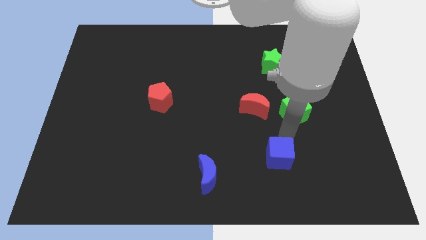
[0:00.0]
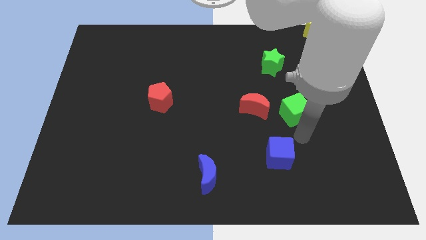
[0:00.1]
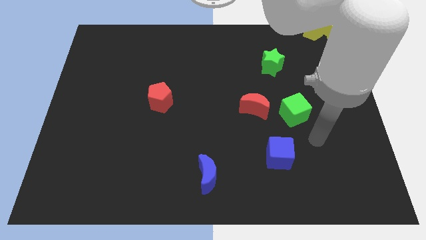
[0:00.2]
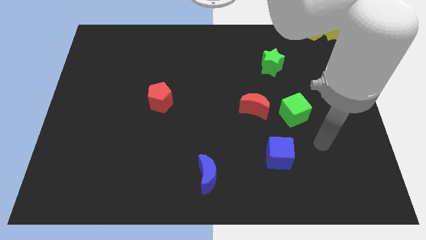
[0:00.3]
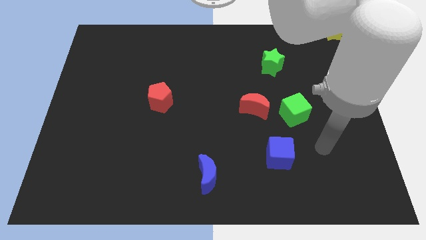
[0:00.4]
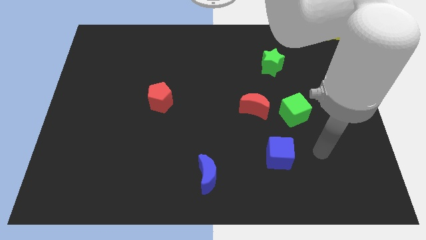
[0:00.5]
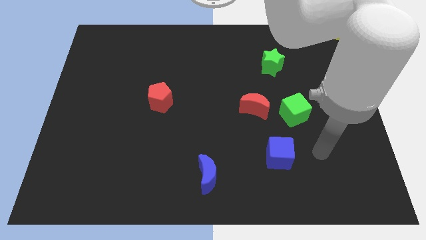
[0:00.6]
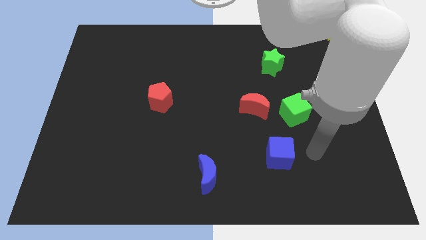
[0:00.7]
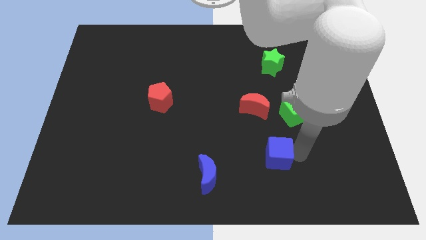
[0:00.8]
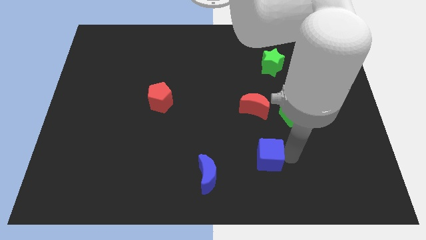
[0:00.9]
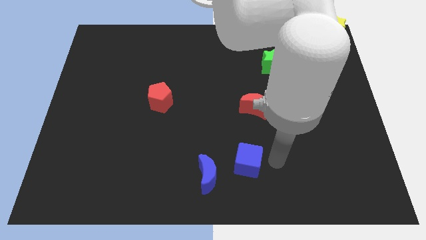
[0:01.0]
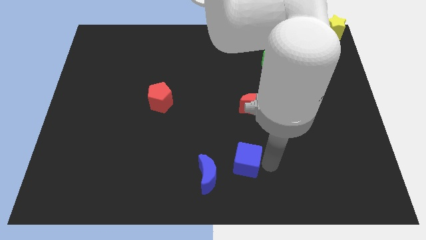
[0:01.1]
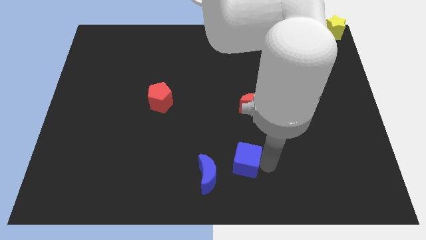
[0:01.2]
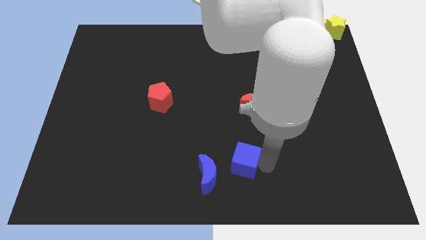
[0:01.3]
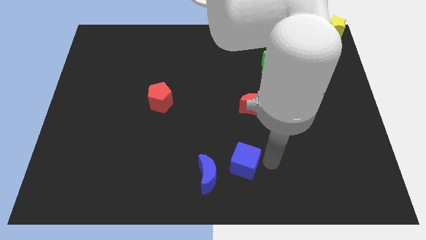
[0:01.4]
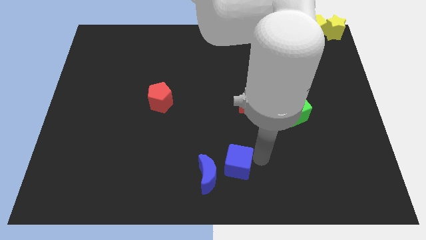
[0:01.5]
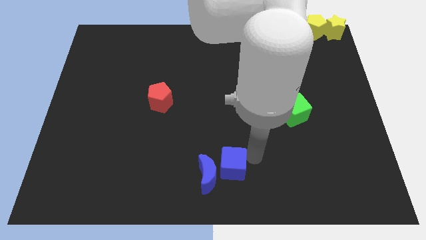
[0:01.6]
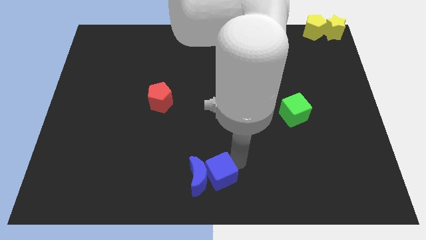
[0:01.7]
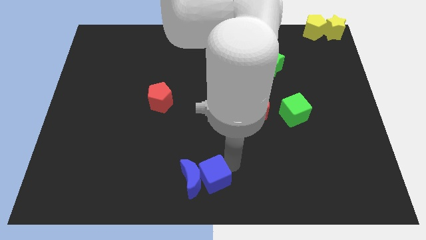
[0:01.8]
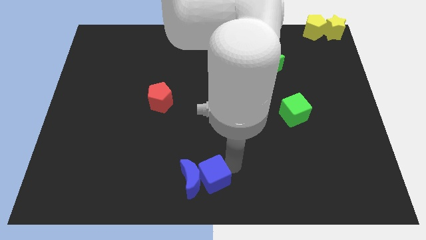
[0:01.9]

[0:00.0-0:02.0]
push the blue cube into the blue moon

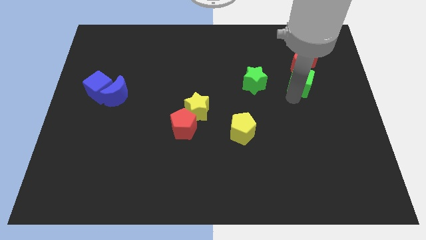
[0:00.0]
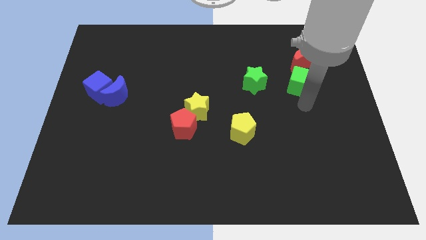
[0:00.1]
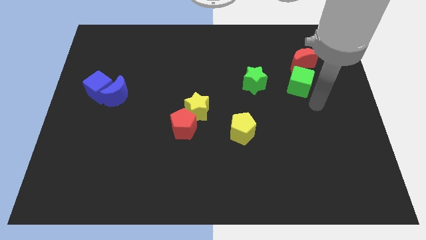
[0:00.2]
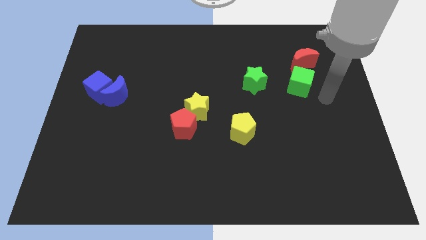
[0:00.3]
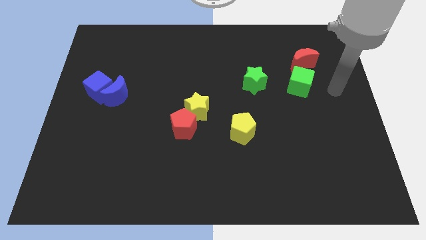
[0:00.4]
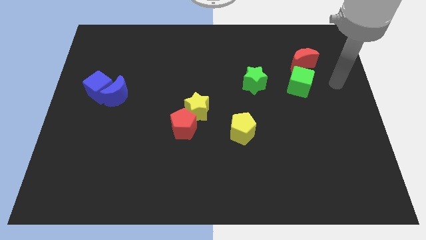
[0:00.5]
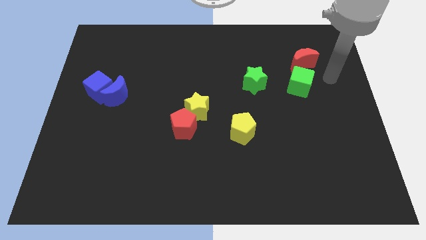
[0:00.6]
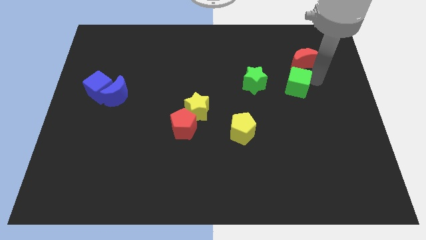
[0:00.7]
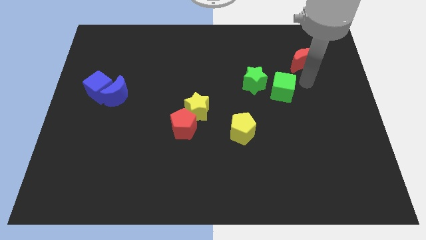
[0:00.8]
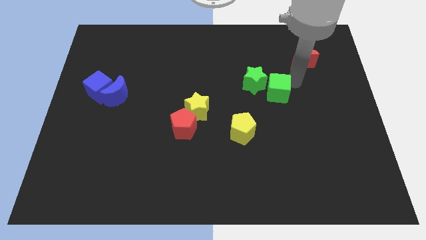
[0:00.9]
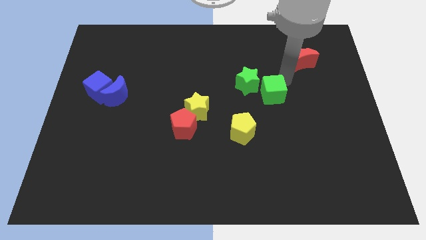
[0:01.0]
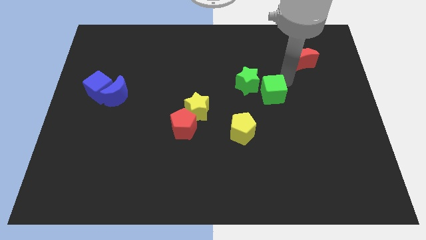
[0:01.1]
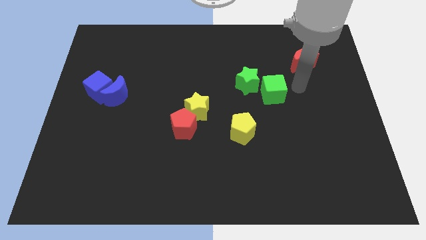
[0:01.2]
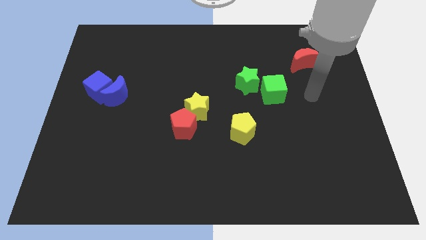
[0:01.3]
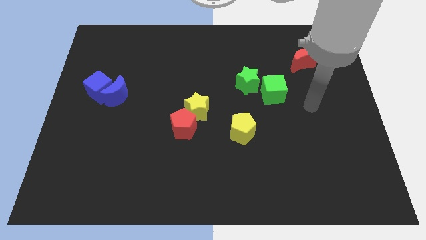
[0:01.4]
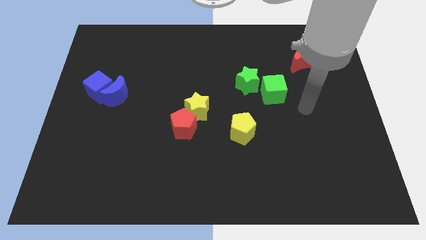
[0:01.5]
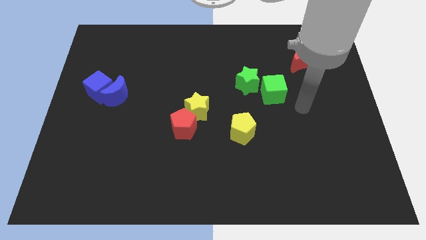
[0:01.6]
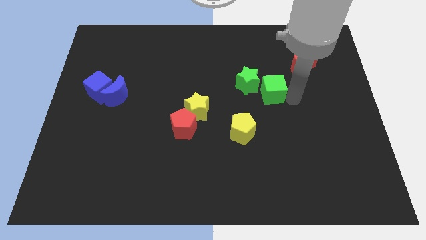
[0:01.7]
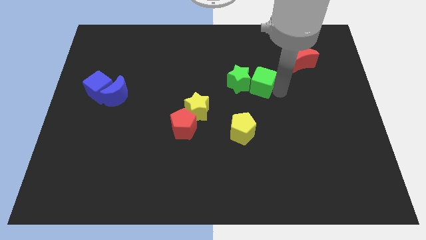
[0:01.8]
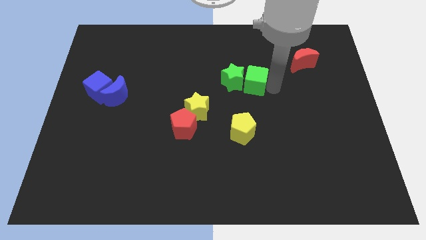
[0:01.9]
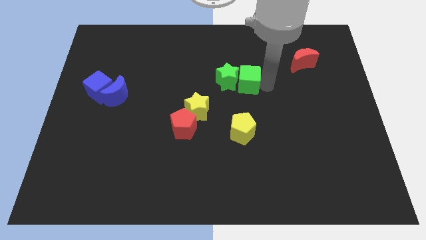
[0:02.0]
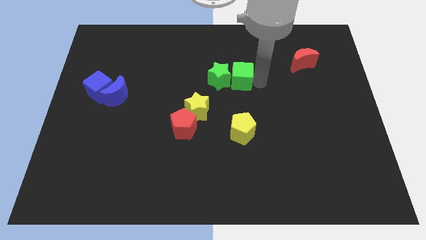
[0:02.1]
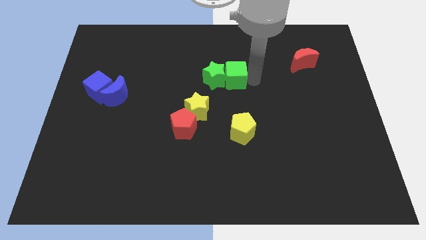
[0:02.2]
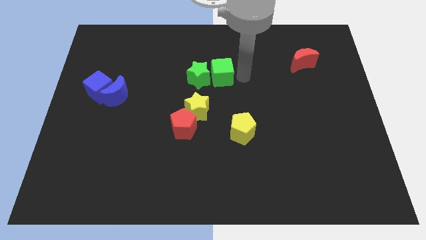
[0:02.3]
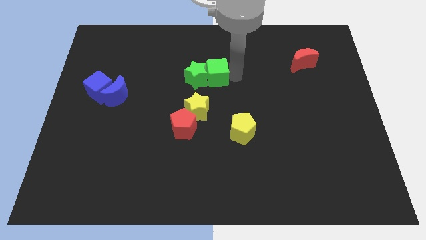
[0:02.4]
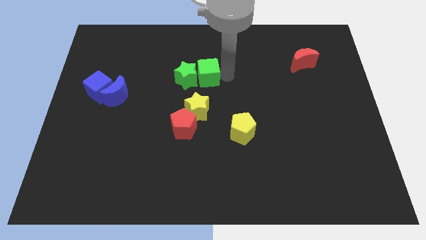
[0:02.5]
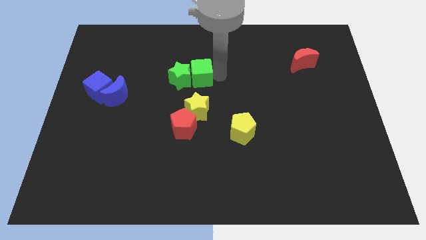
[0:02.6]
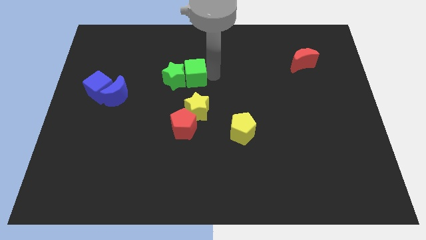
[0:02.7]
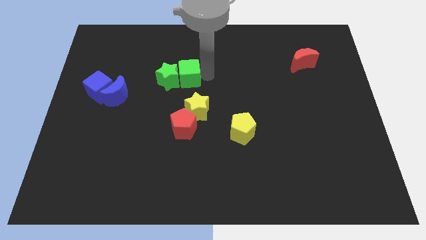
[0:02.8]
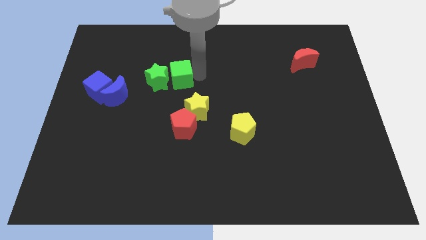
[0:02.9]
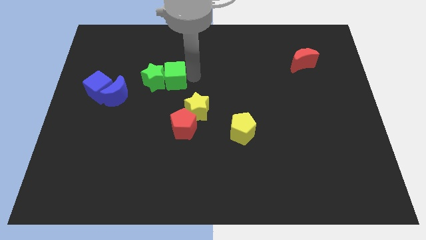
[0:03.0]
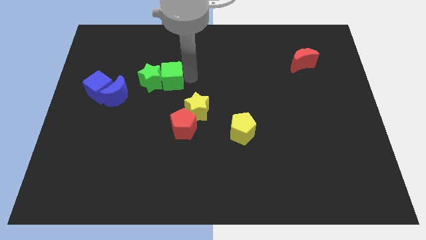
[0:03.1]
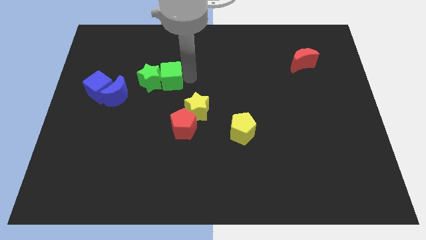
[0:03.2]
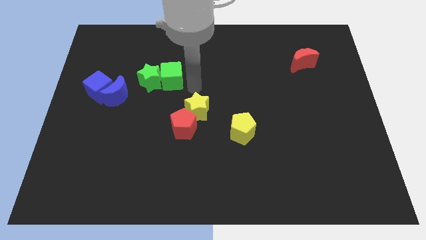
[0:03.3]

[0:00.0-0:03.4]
place green cube to the top of red pentagon

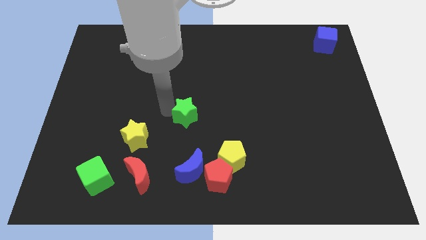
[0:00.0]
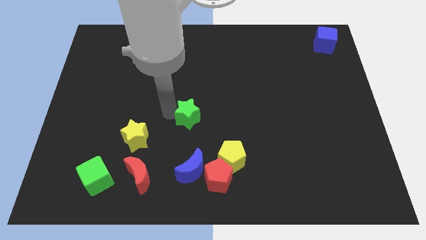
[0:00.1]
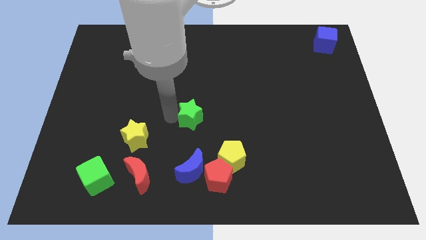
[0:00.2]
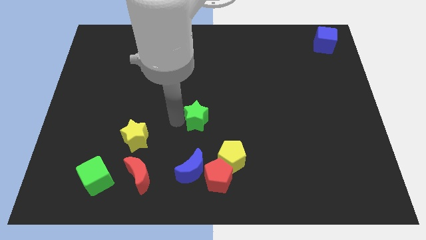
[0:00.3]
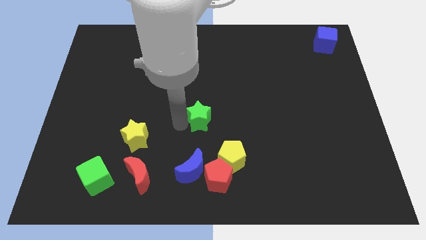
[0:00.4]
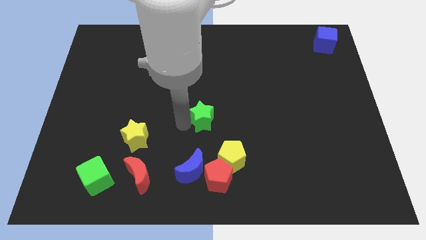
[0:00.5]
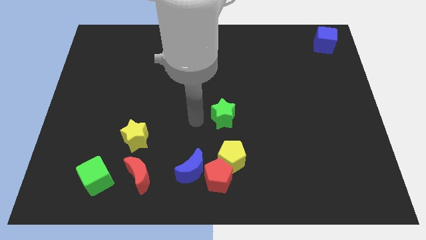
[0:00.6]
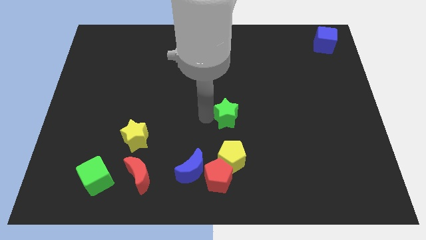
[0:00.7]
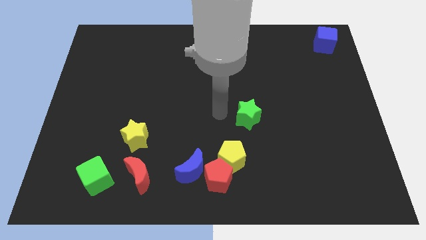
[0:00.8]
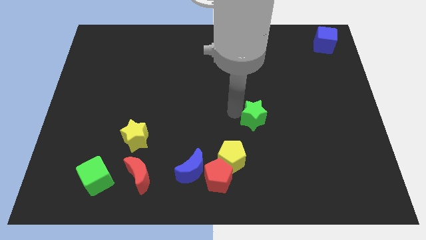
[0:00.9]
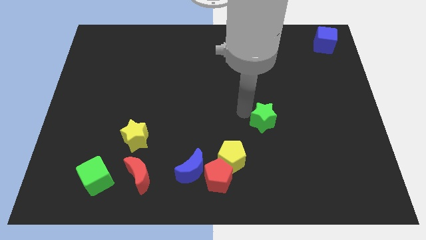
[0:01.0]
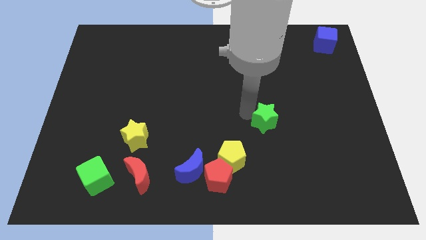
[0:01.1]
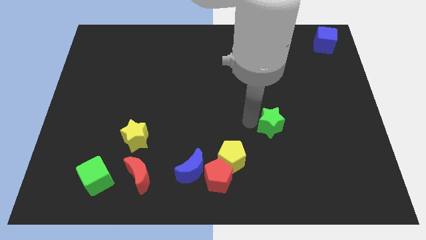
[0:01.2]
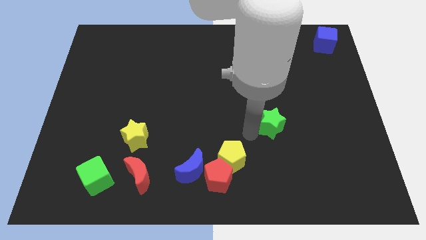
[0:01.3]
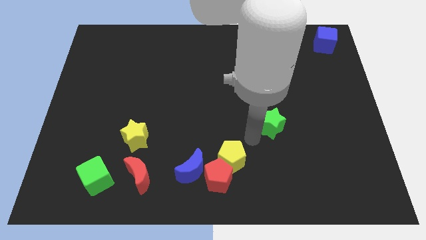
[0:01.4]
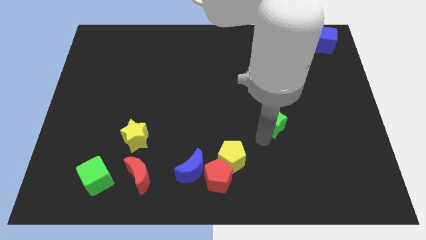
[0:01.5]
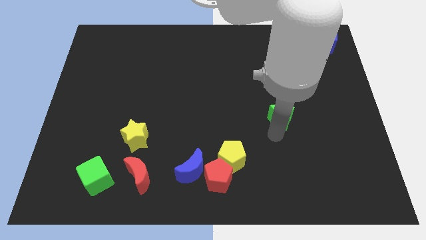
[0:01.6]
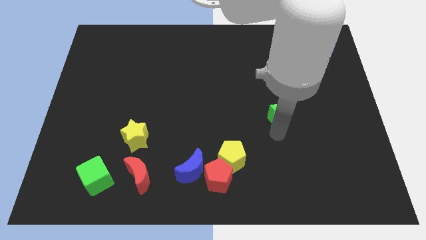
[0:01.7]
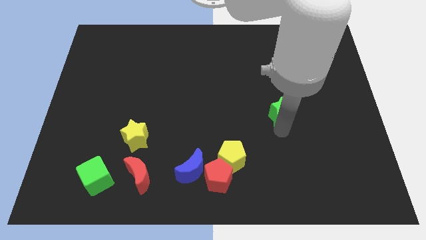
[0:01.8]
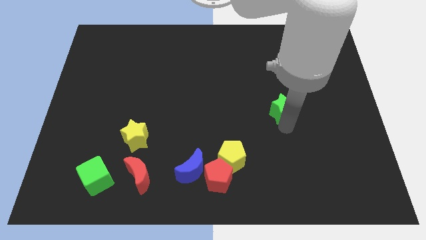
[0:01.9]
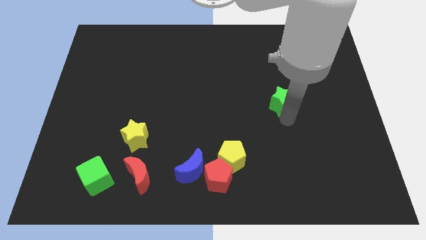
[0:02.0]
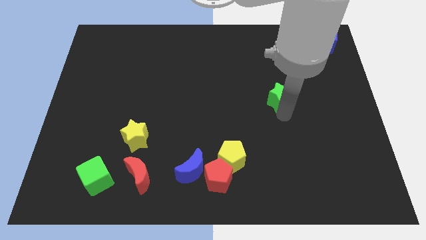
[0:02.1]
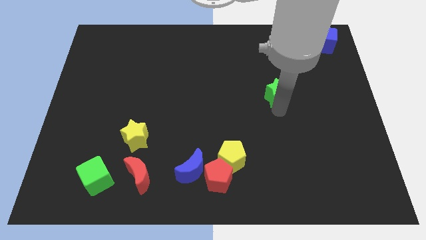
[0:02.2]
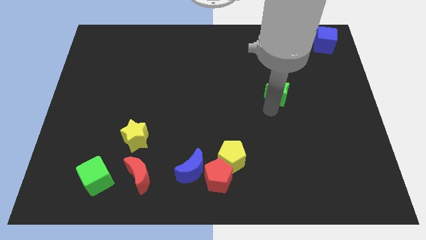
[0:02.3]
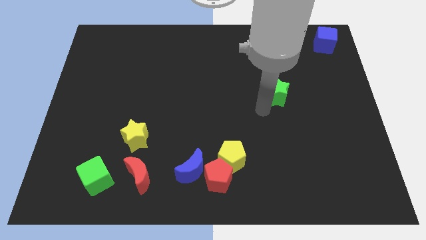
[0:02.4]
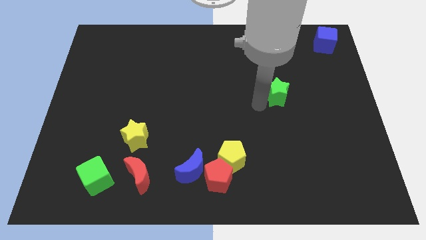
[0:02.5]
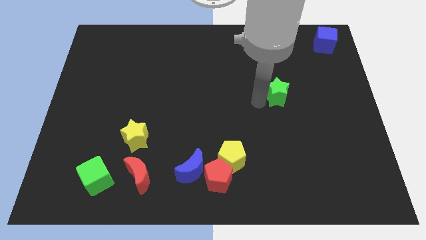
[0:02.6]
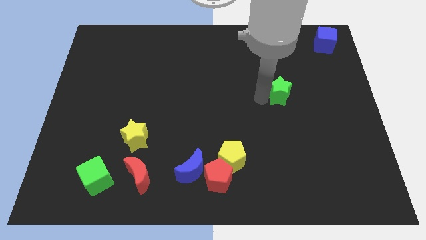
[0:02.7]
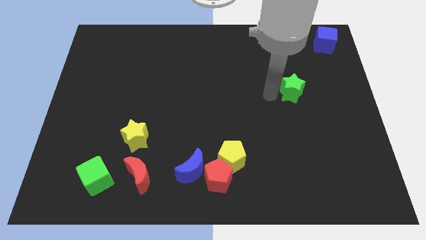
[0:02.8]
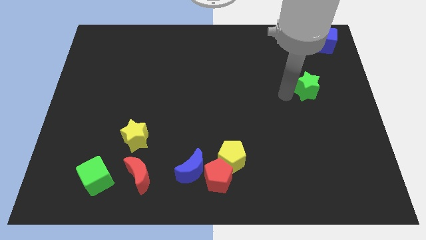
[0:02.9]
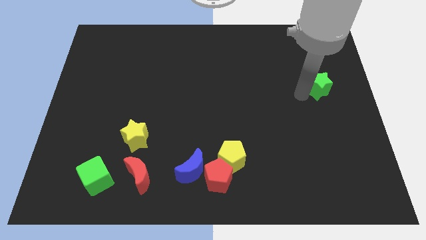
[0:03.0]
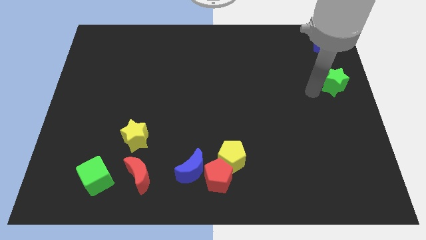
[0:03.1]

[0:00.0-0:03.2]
push the green star to the bottom of the blue cube

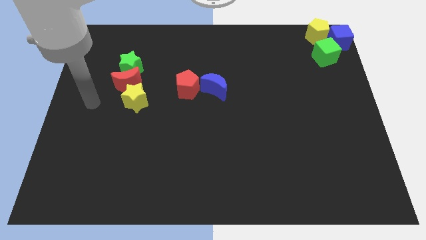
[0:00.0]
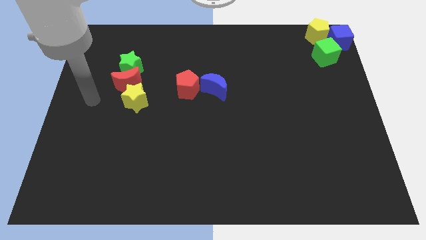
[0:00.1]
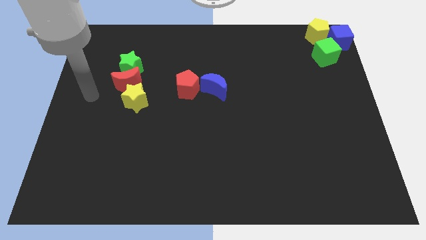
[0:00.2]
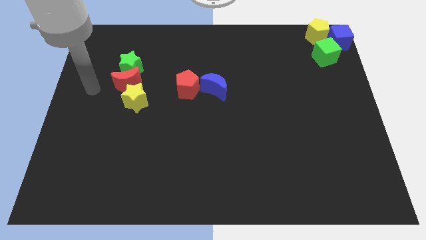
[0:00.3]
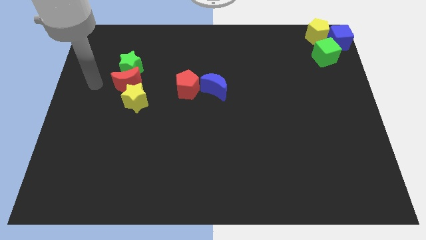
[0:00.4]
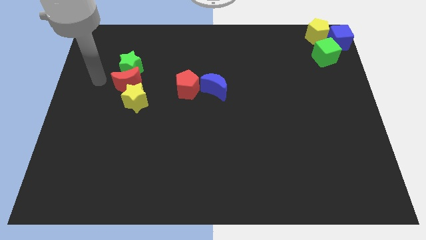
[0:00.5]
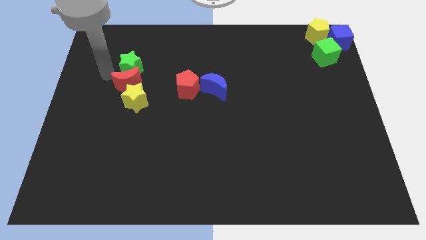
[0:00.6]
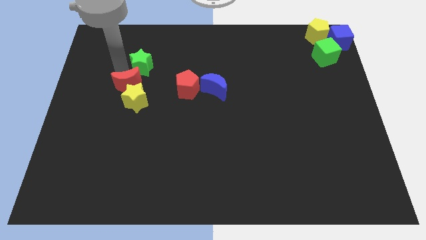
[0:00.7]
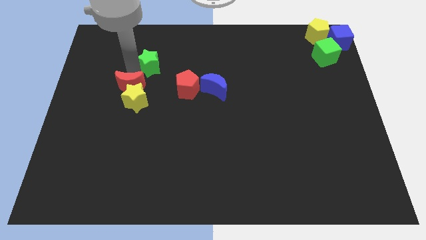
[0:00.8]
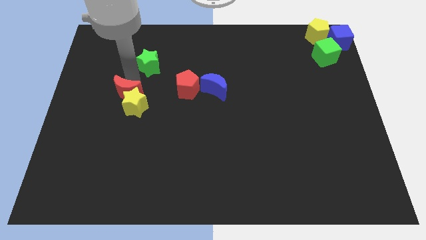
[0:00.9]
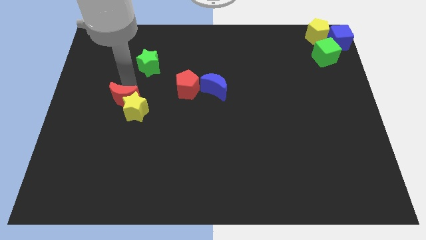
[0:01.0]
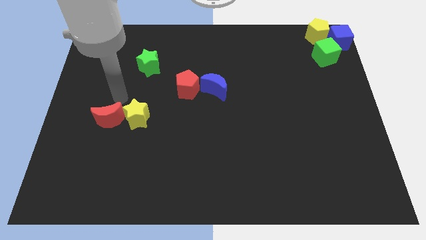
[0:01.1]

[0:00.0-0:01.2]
separate the red crescent from the green star
